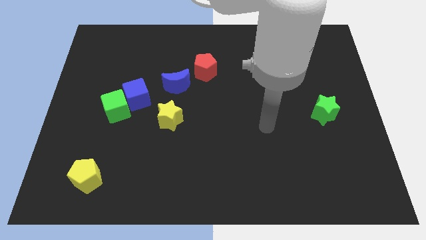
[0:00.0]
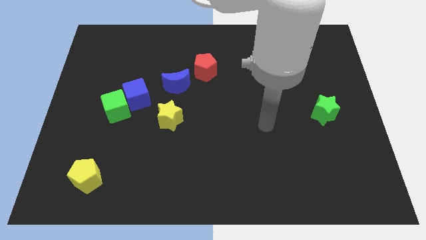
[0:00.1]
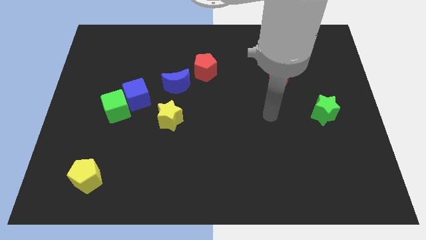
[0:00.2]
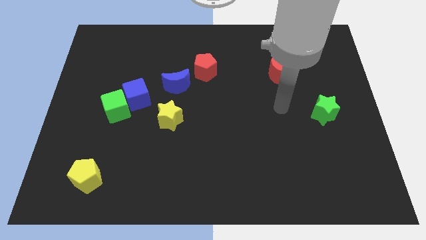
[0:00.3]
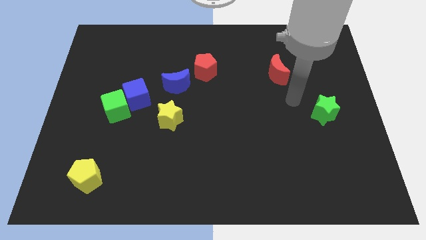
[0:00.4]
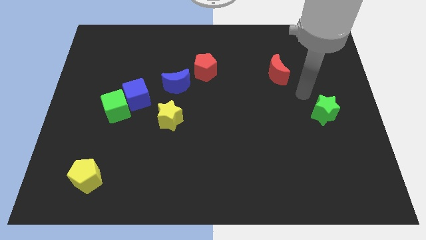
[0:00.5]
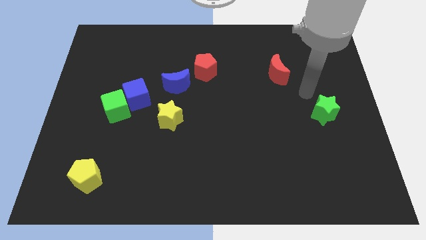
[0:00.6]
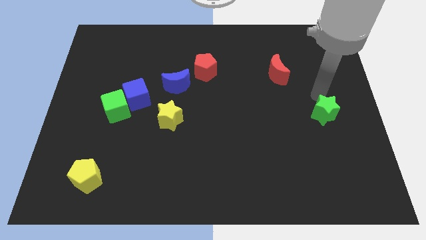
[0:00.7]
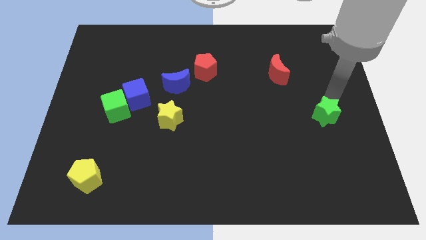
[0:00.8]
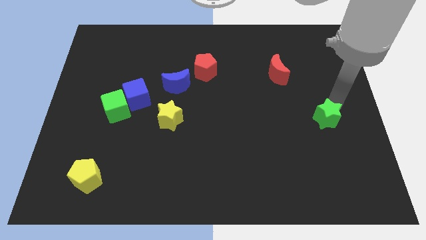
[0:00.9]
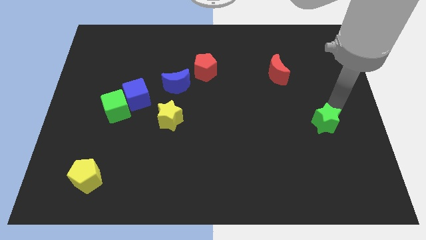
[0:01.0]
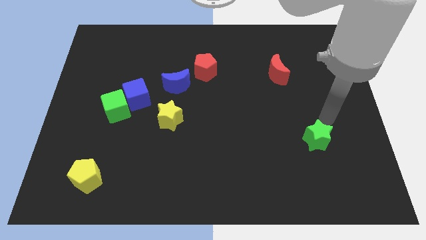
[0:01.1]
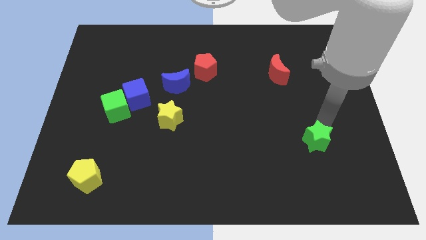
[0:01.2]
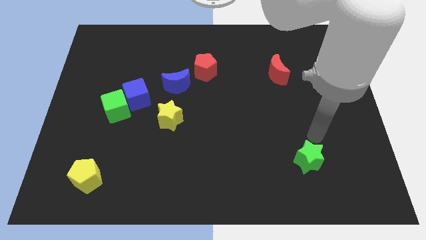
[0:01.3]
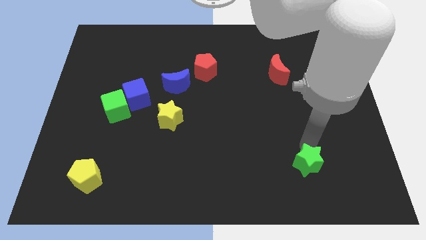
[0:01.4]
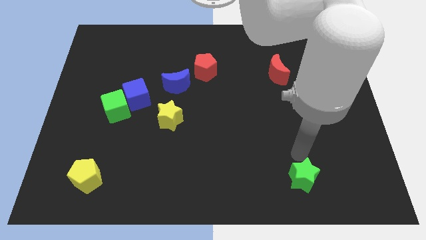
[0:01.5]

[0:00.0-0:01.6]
move the green star diagonal to the yellow star

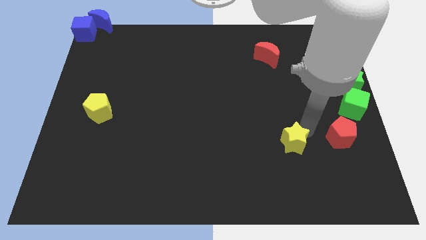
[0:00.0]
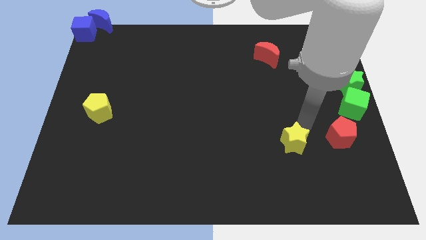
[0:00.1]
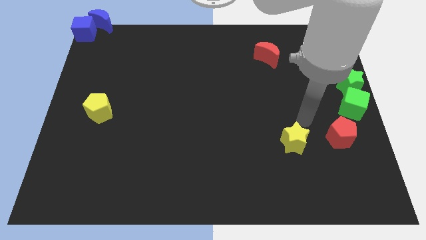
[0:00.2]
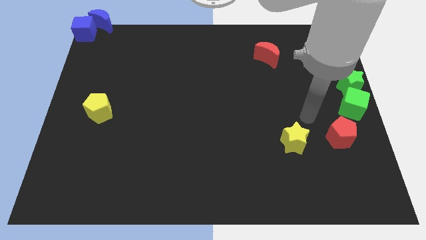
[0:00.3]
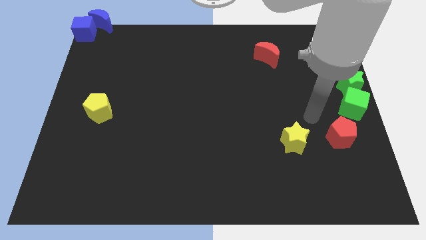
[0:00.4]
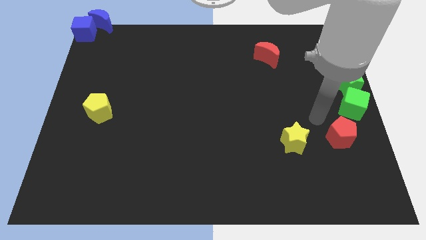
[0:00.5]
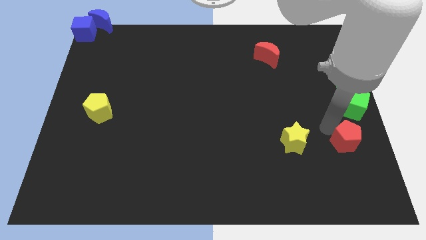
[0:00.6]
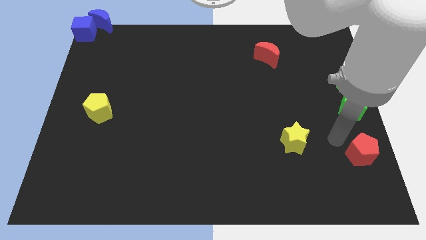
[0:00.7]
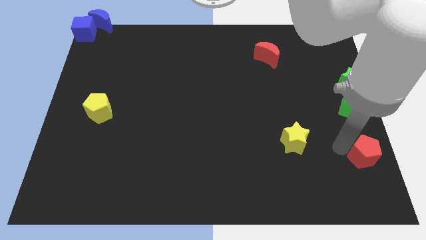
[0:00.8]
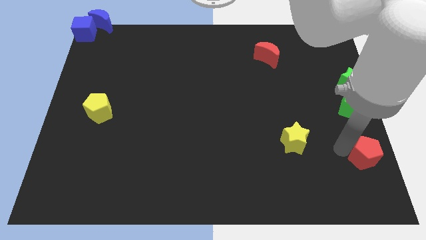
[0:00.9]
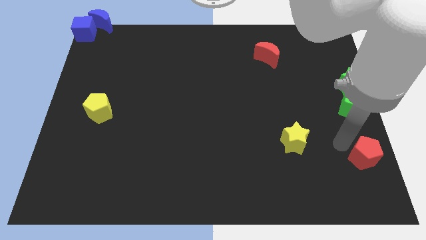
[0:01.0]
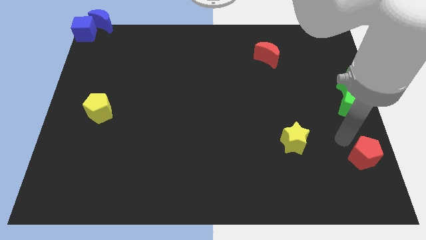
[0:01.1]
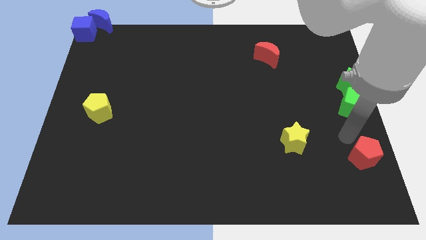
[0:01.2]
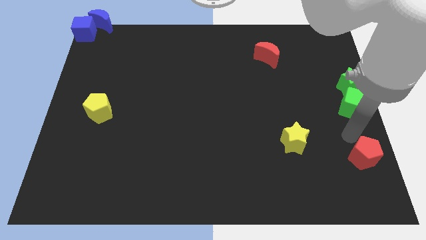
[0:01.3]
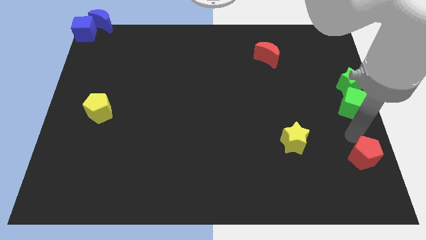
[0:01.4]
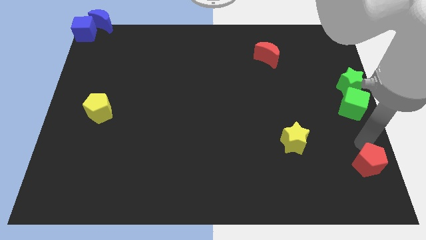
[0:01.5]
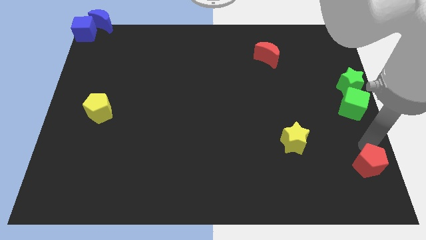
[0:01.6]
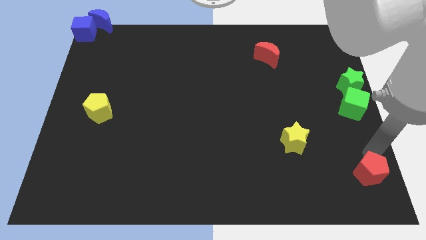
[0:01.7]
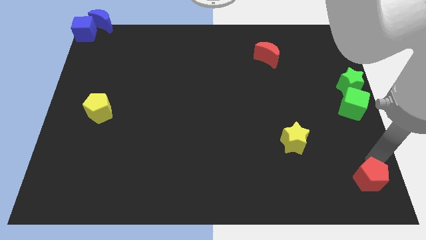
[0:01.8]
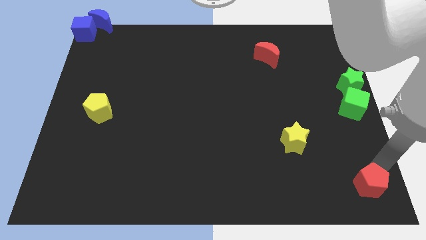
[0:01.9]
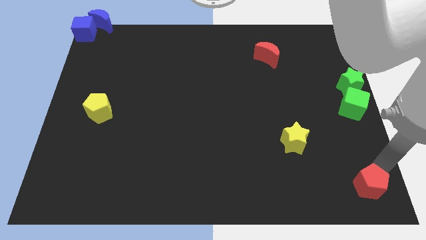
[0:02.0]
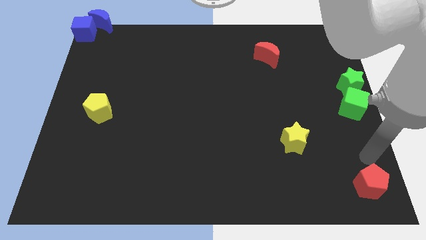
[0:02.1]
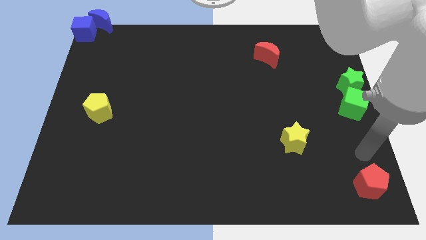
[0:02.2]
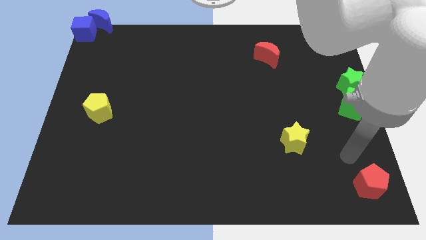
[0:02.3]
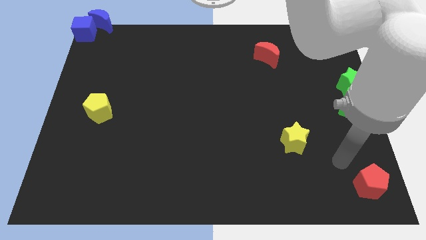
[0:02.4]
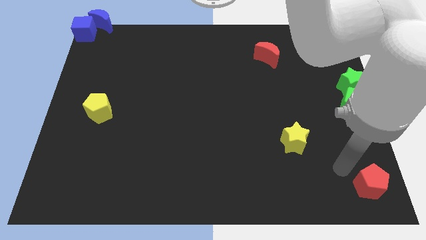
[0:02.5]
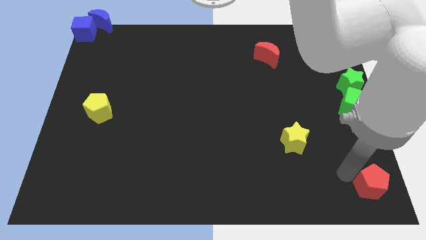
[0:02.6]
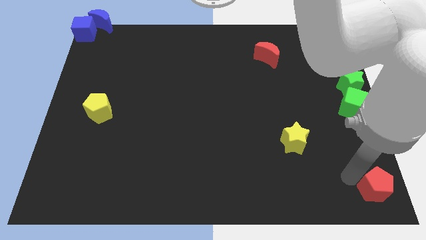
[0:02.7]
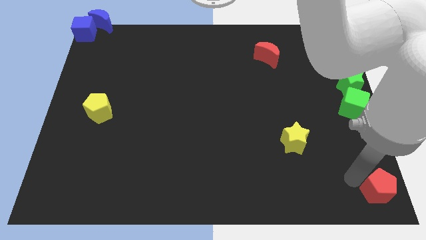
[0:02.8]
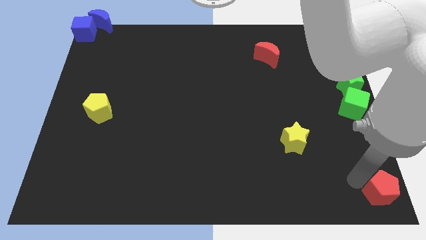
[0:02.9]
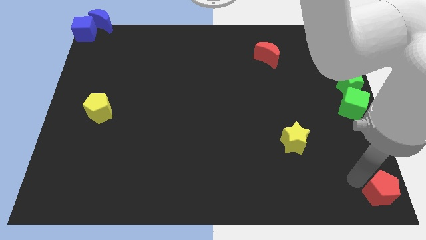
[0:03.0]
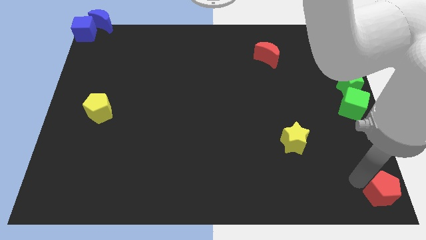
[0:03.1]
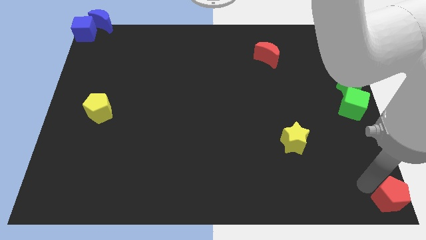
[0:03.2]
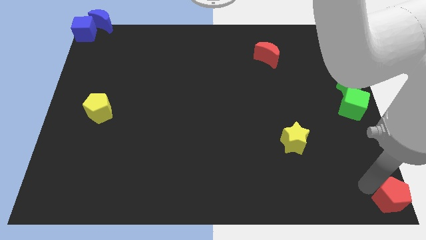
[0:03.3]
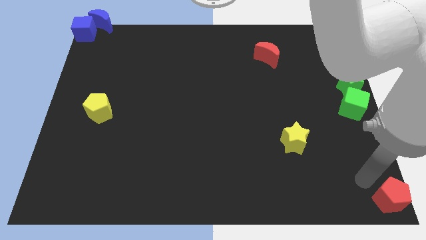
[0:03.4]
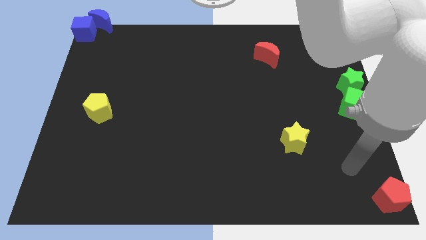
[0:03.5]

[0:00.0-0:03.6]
place the red pentagon at the bottom right corner of the board

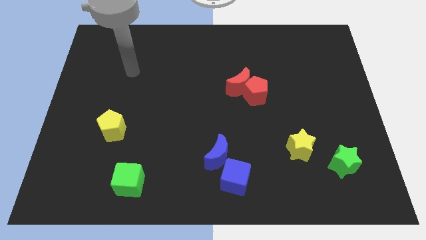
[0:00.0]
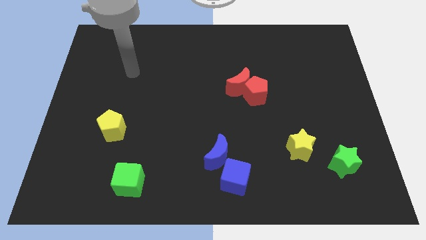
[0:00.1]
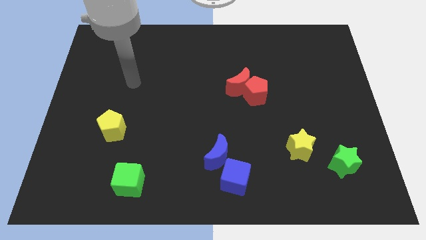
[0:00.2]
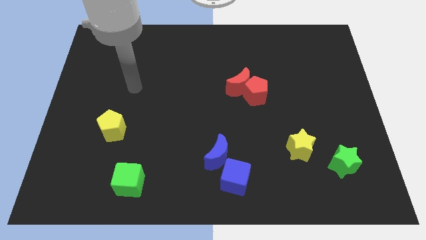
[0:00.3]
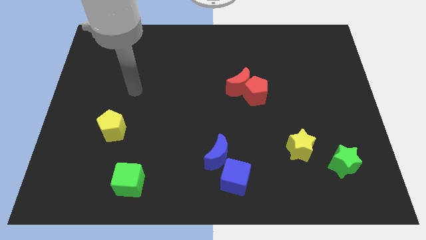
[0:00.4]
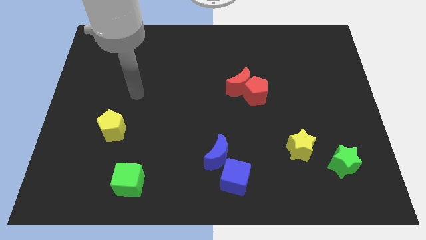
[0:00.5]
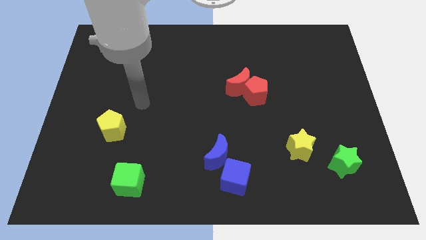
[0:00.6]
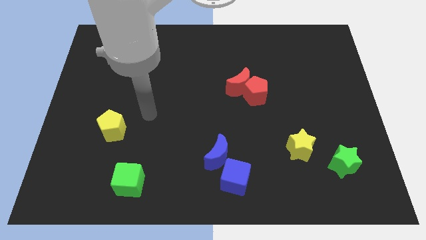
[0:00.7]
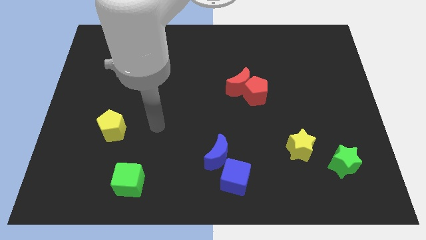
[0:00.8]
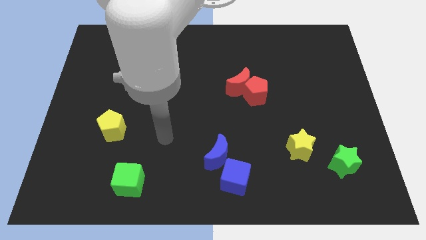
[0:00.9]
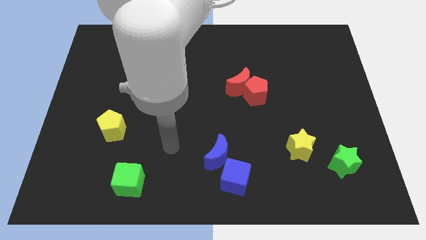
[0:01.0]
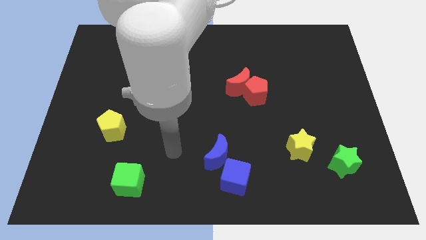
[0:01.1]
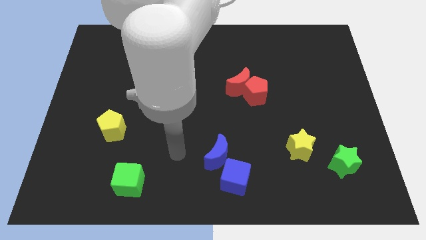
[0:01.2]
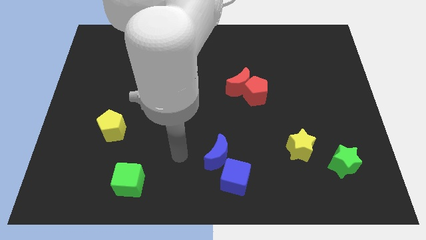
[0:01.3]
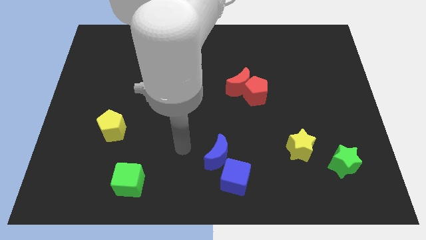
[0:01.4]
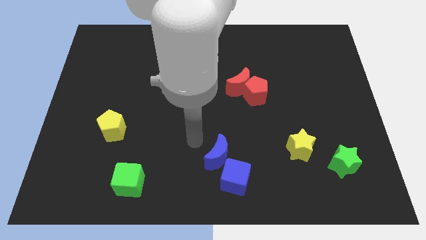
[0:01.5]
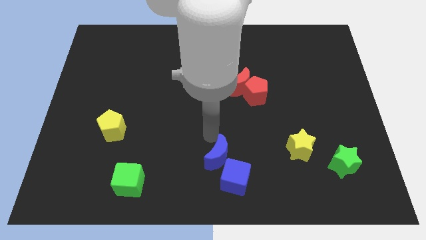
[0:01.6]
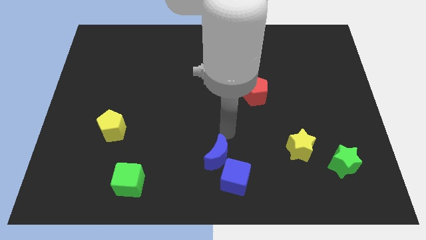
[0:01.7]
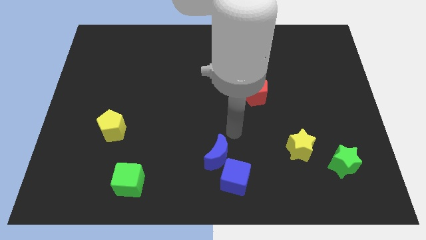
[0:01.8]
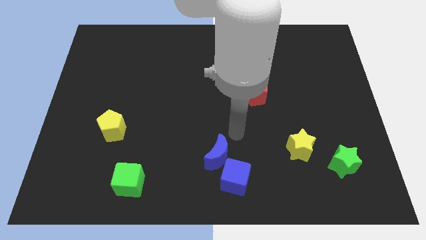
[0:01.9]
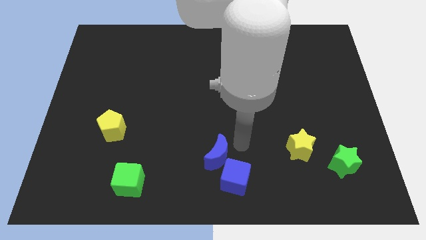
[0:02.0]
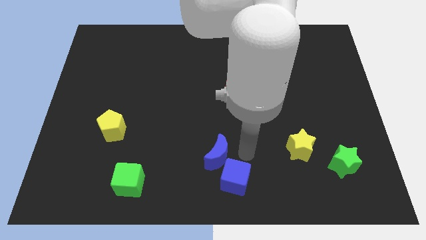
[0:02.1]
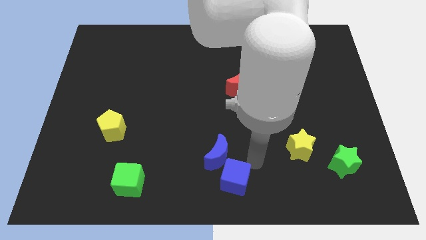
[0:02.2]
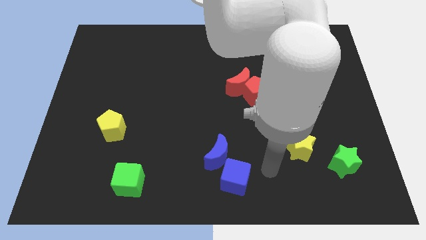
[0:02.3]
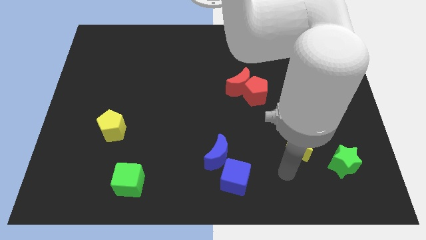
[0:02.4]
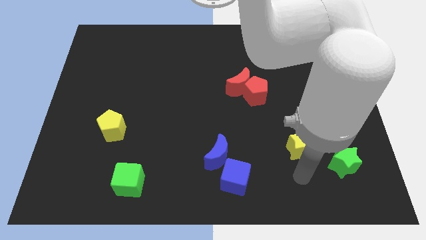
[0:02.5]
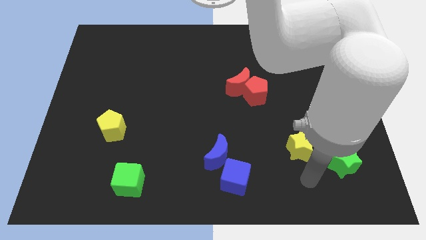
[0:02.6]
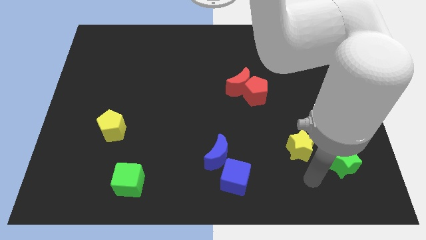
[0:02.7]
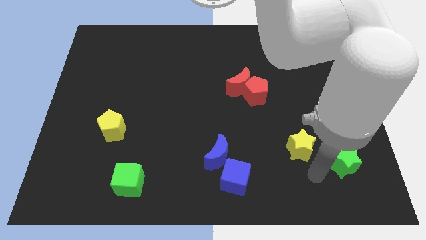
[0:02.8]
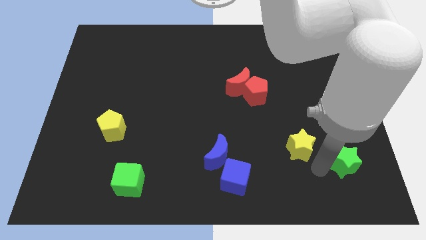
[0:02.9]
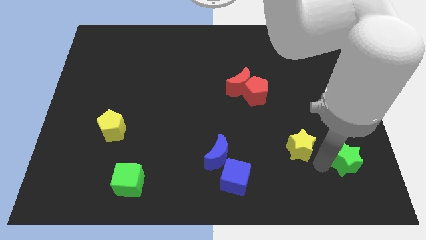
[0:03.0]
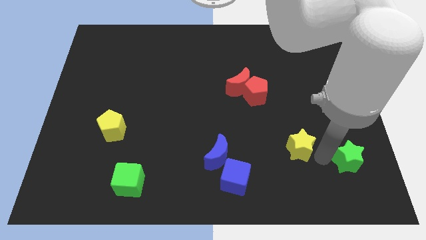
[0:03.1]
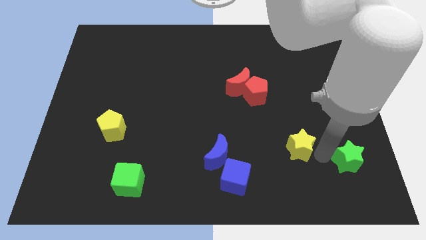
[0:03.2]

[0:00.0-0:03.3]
move the green star slightly to the right

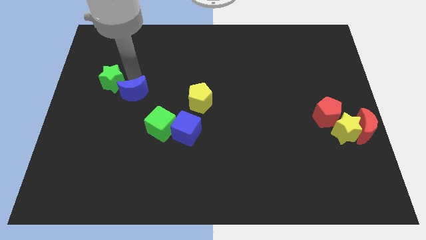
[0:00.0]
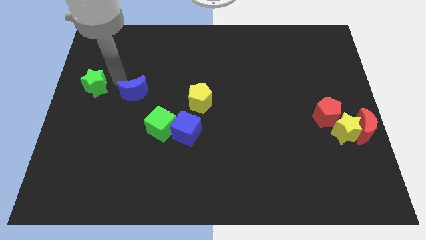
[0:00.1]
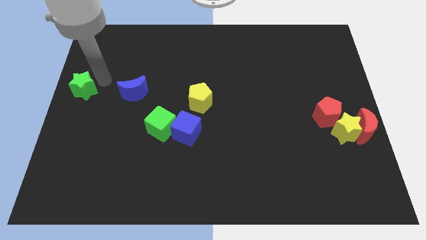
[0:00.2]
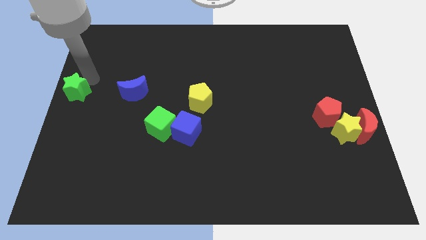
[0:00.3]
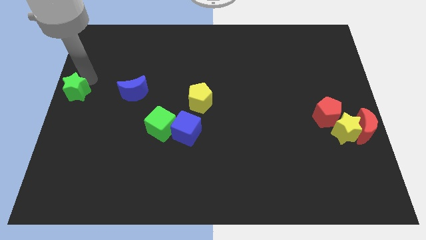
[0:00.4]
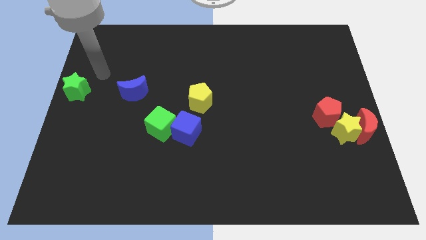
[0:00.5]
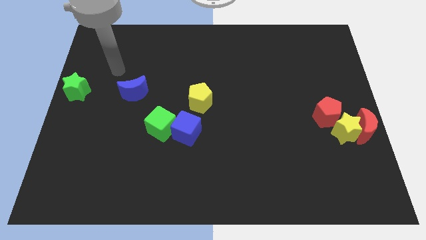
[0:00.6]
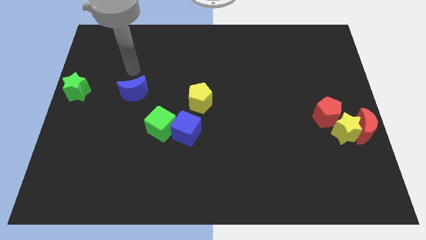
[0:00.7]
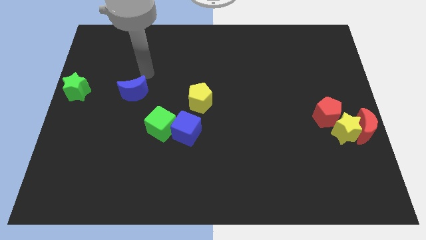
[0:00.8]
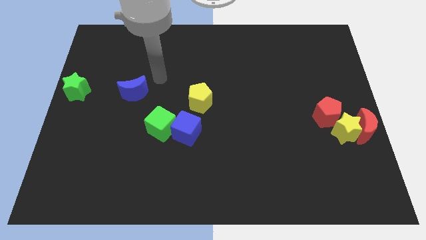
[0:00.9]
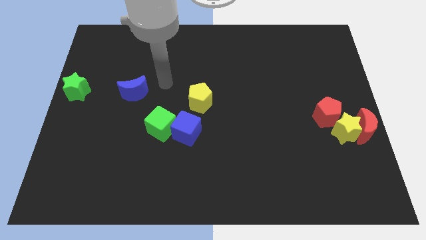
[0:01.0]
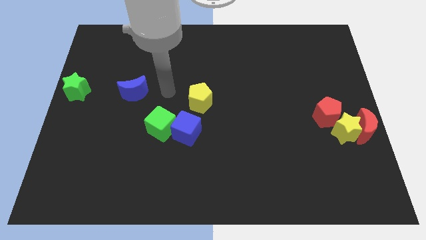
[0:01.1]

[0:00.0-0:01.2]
move the green star to the left center of the board
